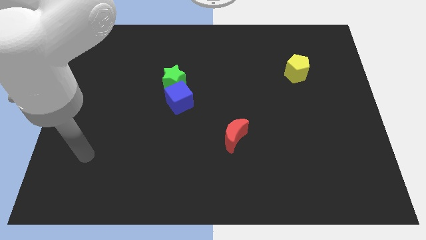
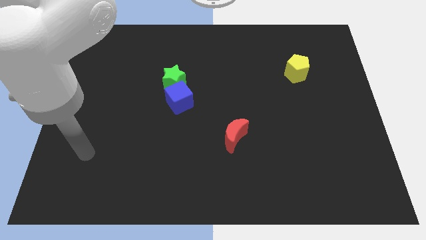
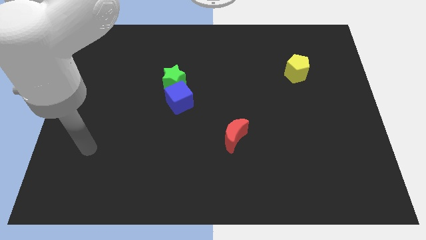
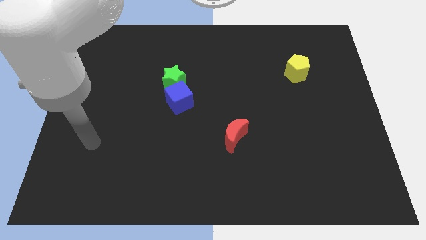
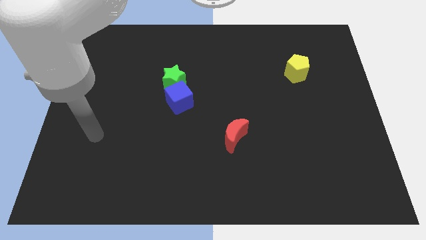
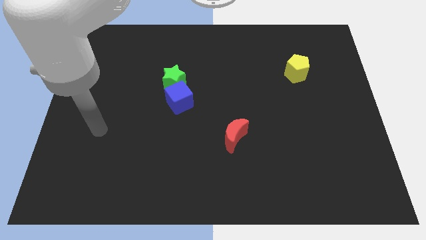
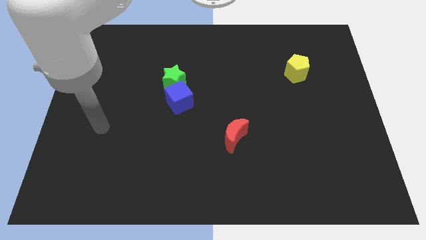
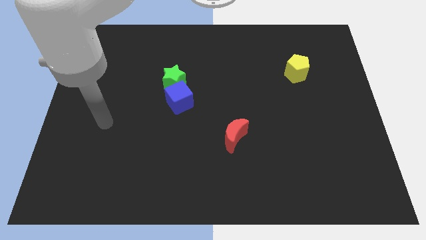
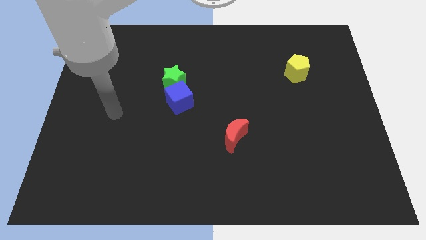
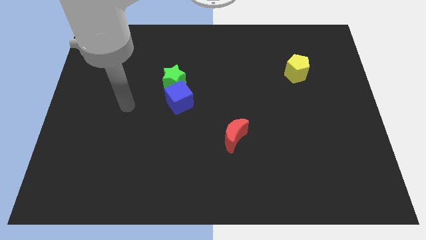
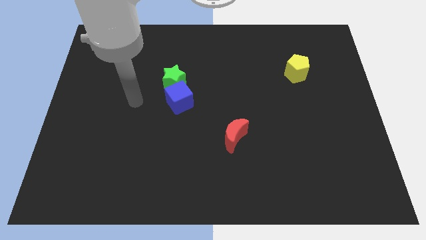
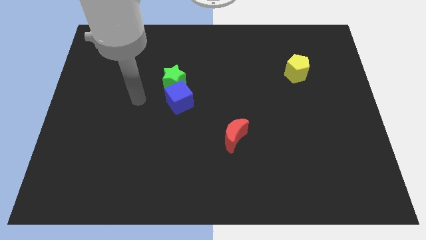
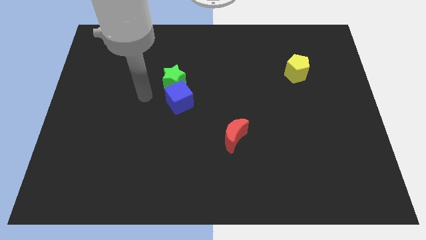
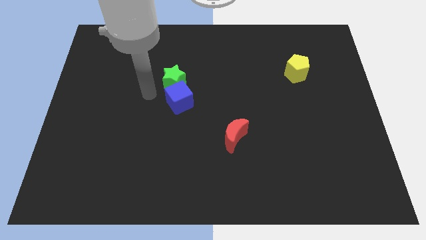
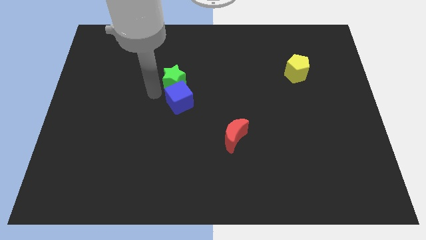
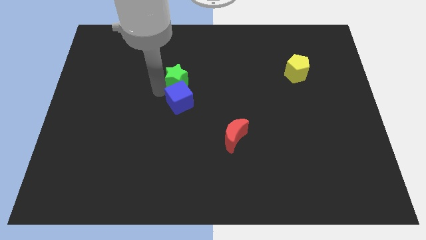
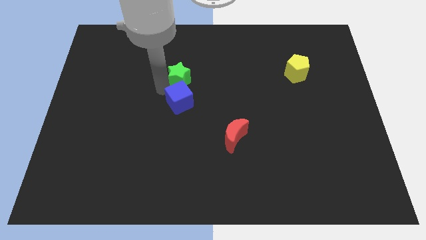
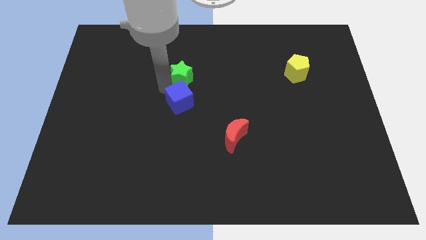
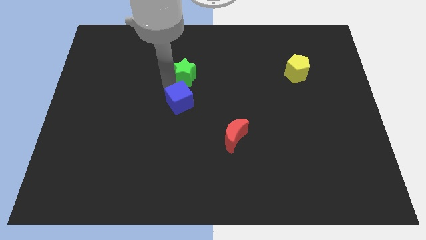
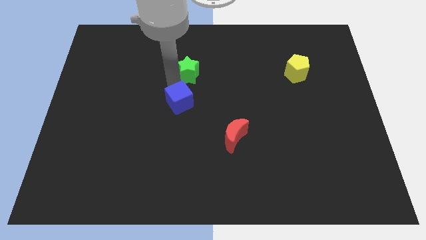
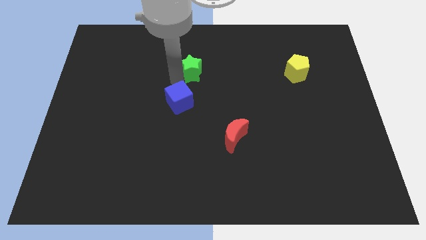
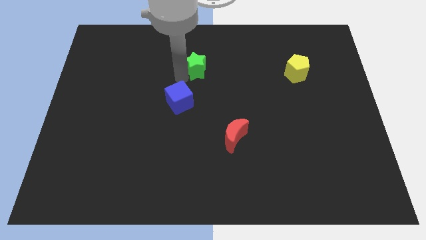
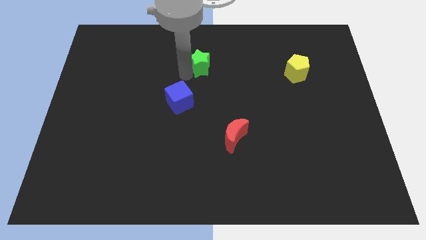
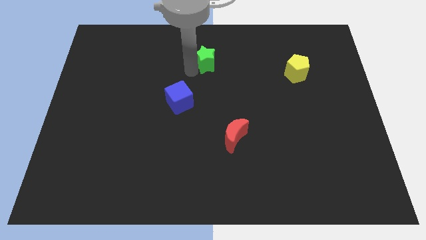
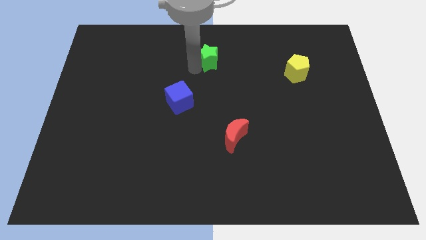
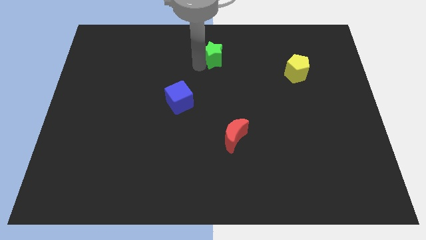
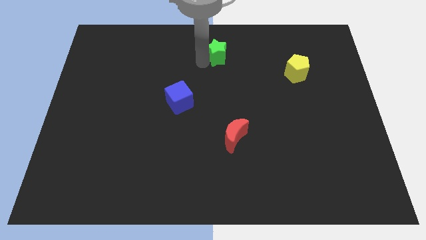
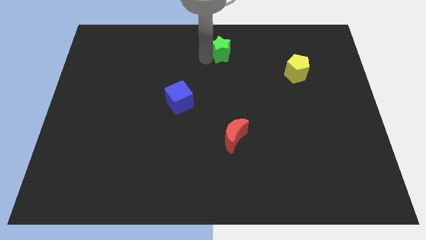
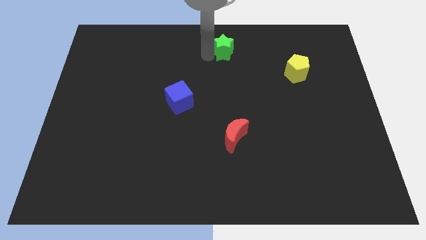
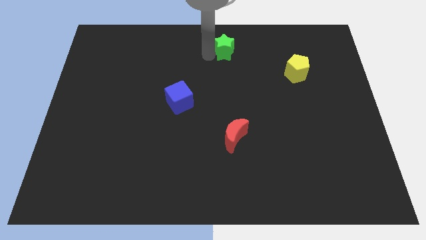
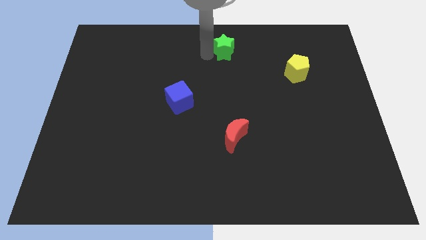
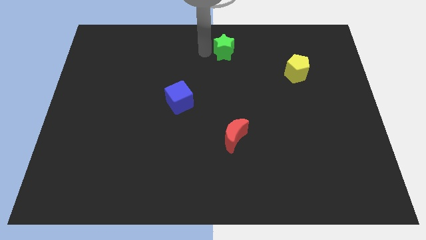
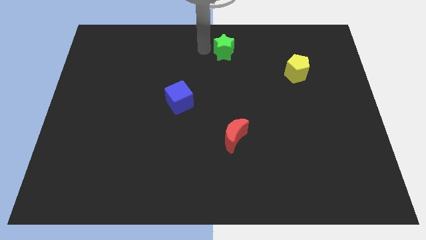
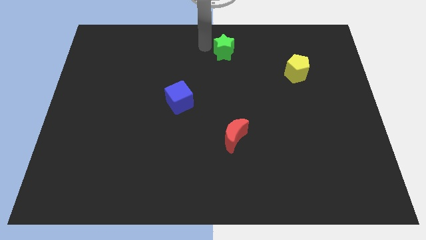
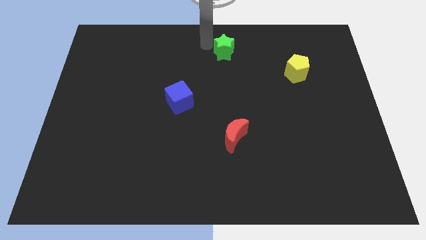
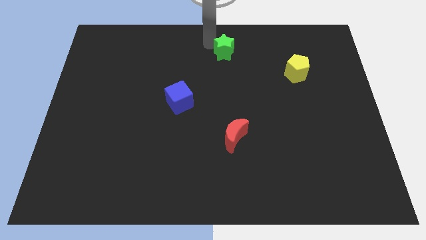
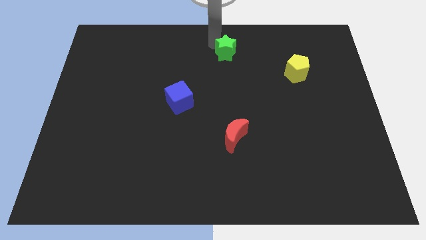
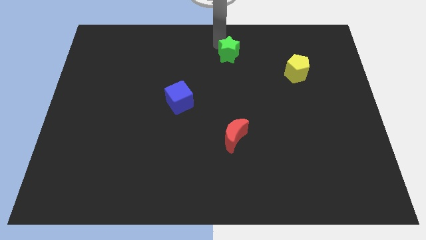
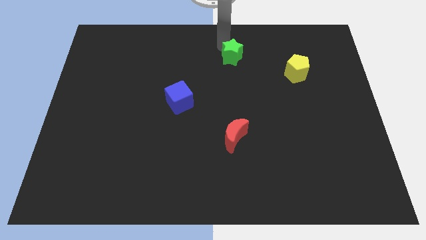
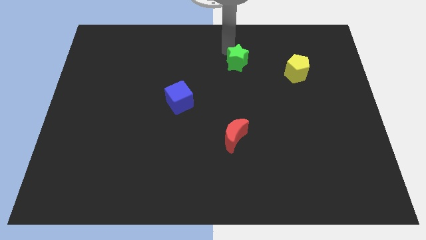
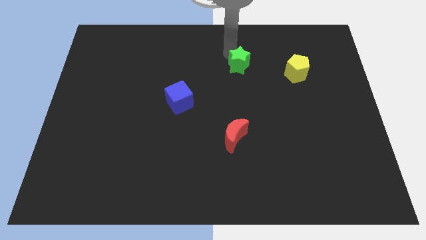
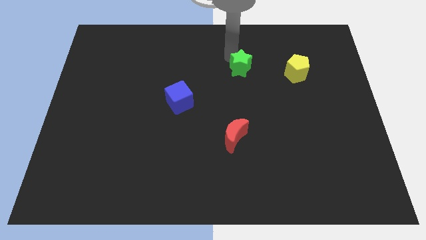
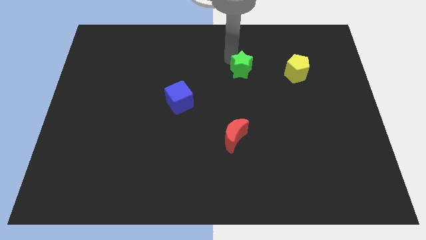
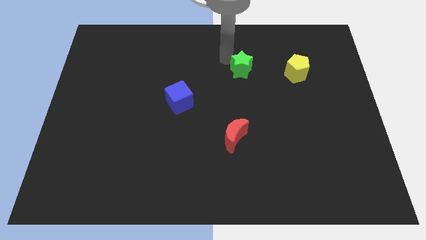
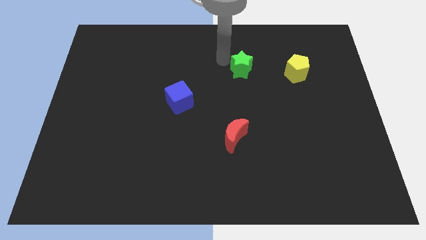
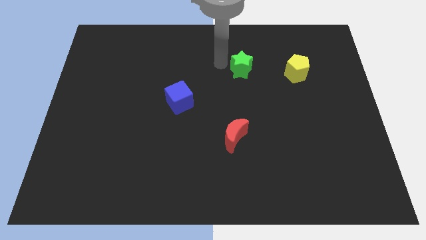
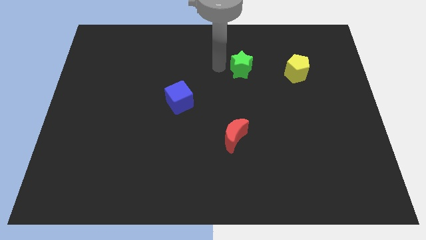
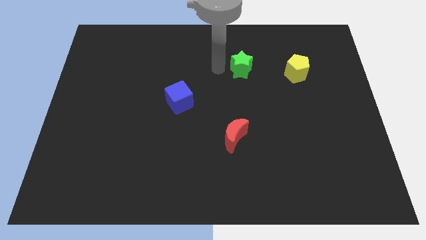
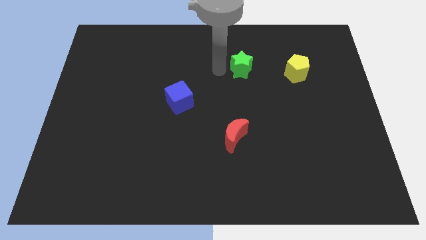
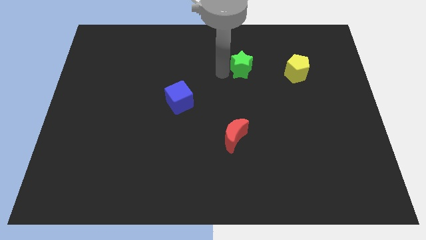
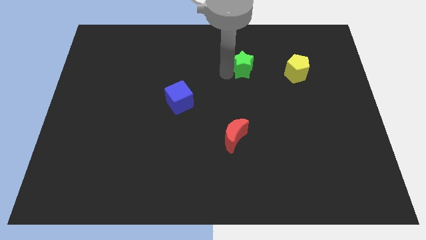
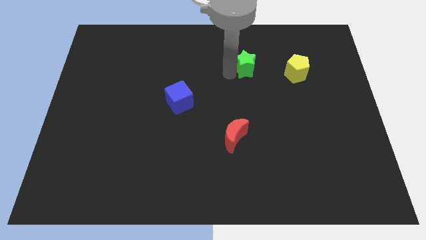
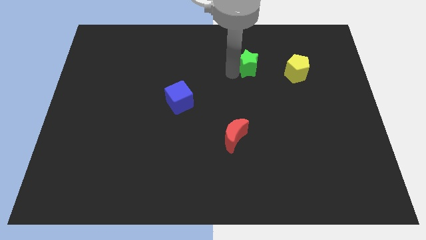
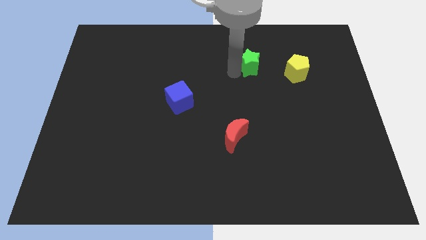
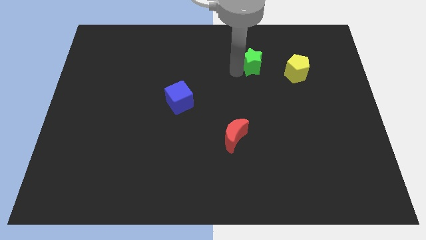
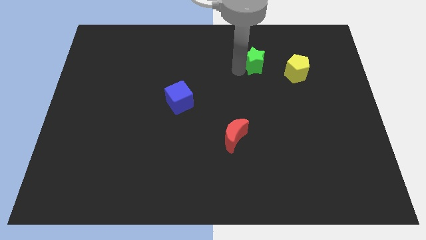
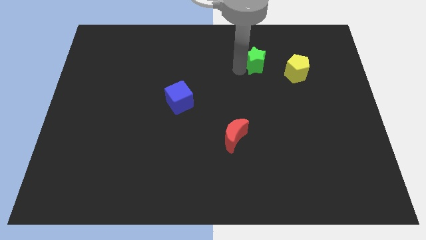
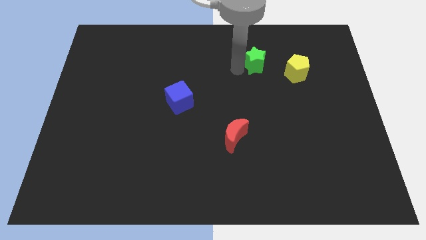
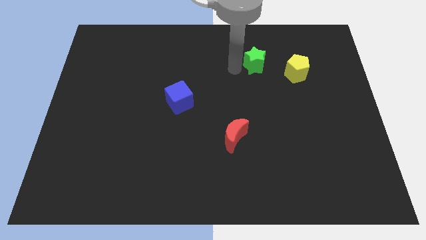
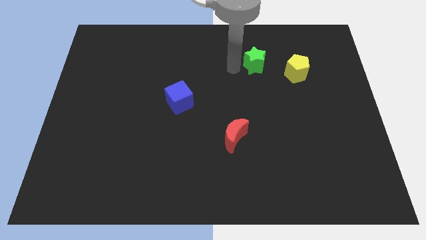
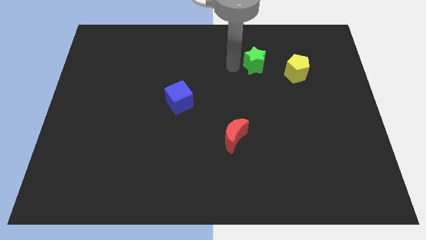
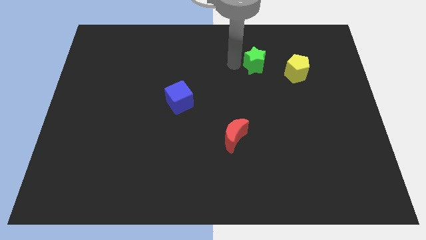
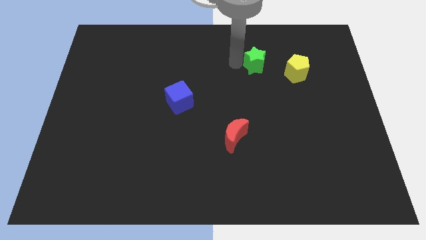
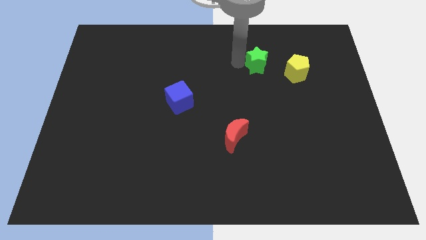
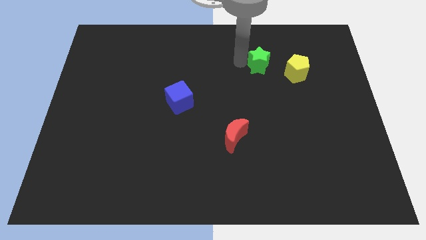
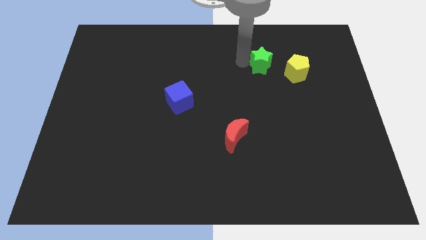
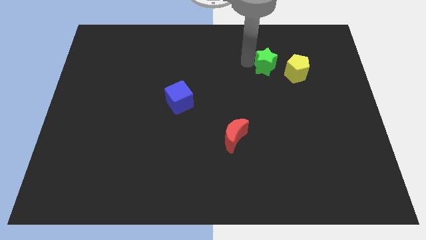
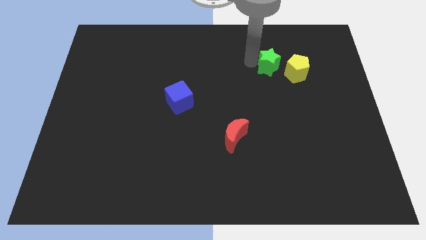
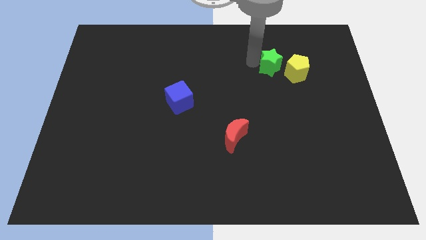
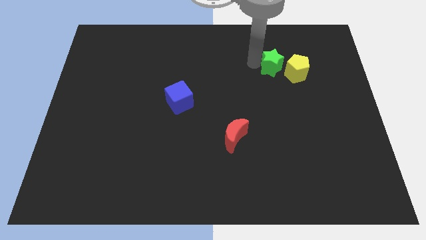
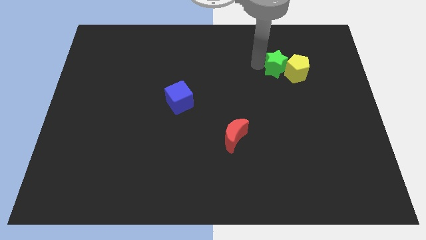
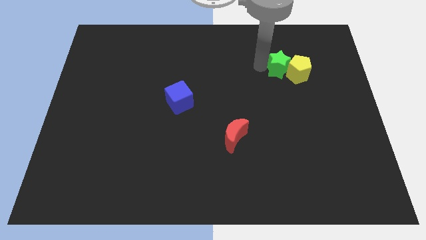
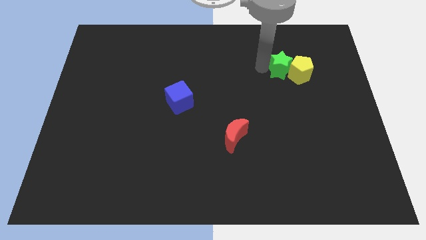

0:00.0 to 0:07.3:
move the green block close to the pentagon

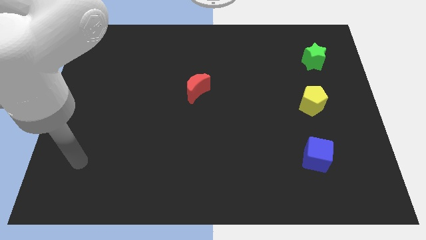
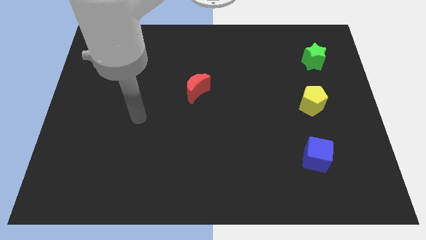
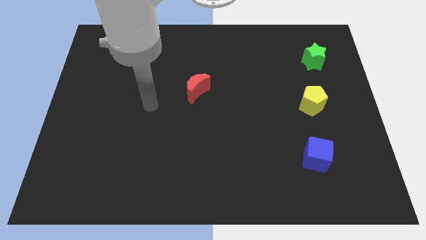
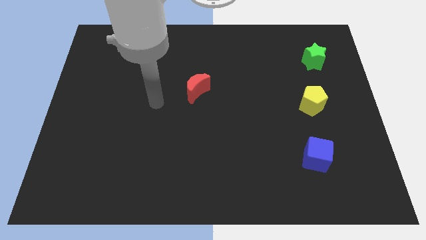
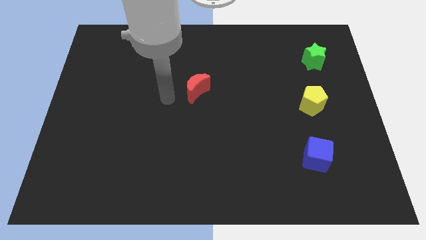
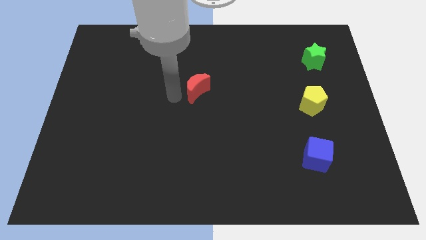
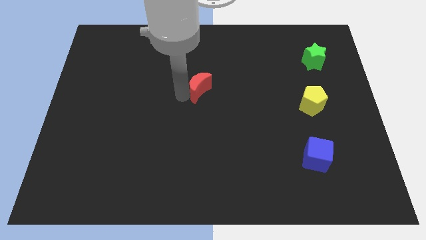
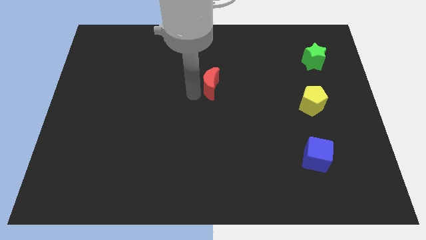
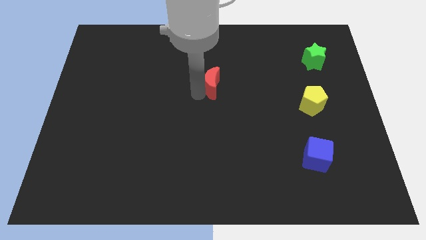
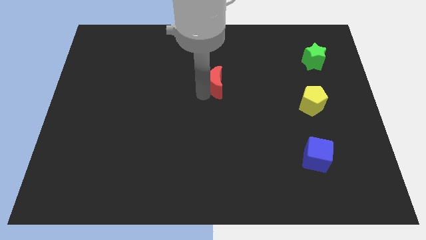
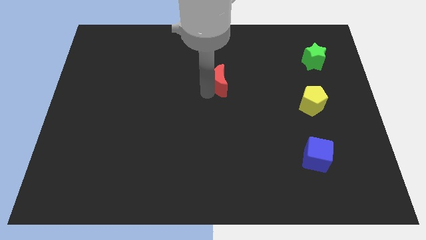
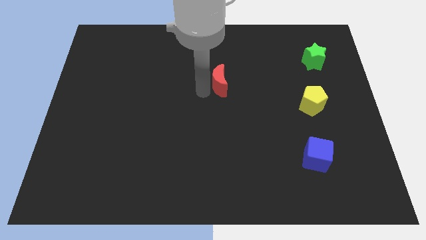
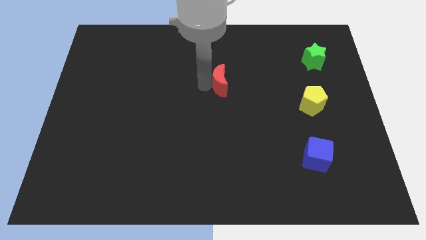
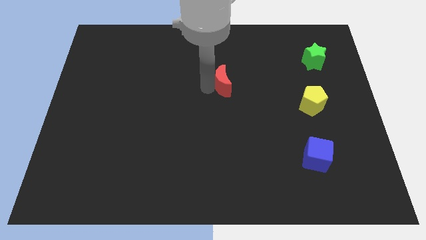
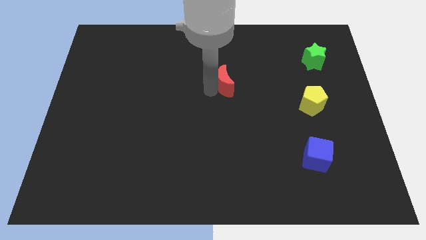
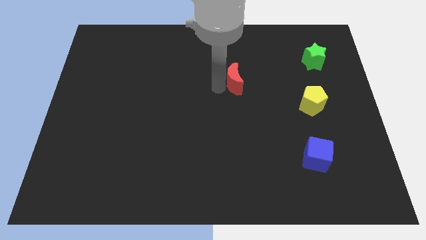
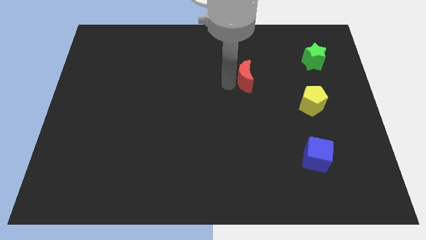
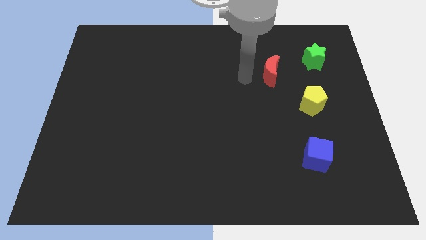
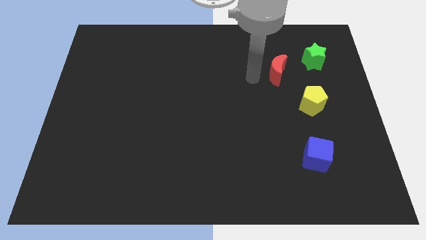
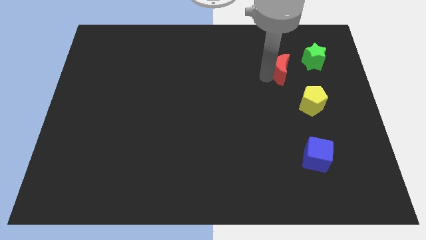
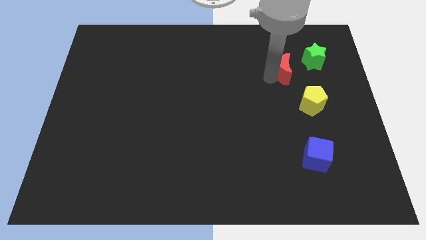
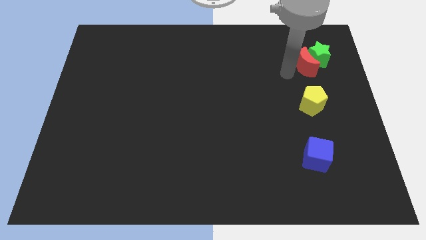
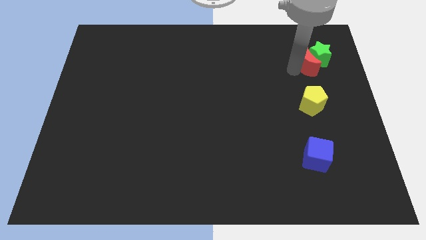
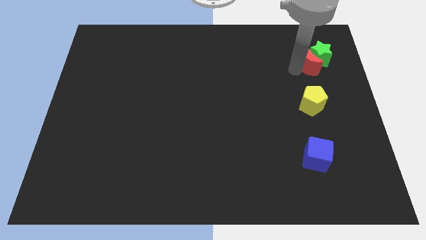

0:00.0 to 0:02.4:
put the moon to the green star
